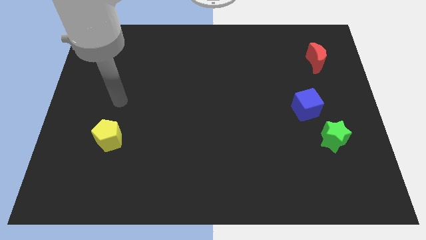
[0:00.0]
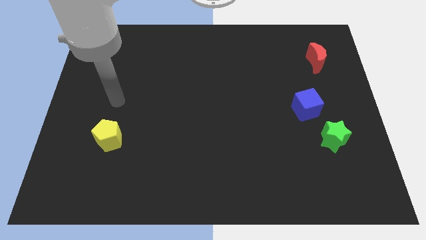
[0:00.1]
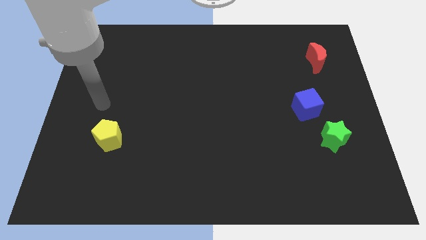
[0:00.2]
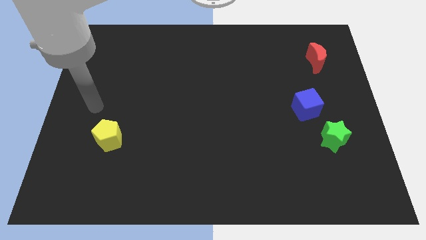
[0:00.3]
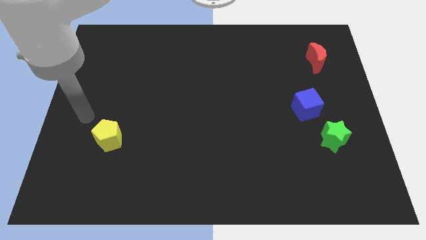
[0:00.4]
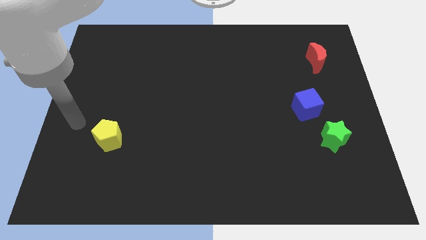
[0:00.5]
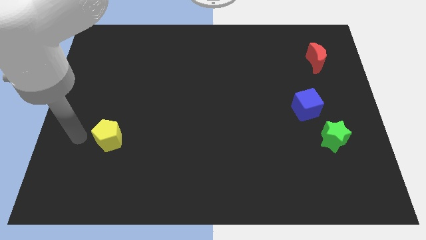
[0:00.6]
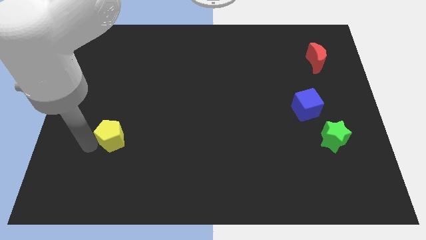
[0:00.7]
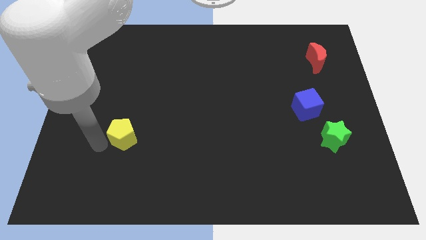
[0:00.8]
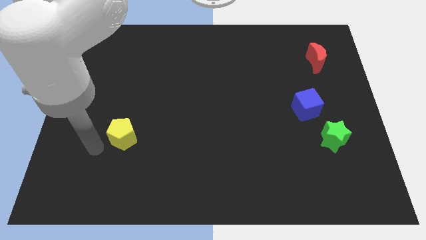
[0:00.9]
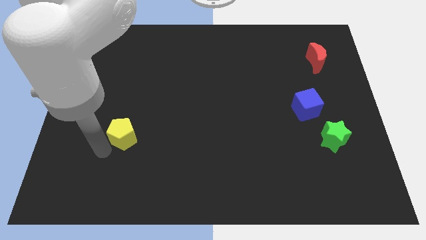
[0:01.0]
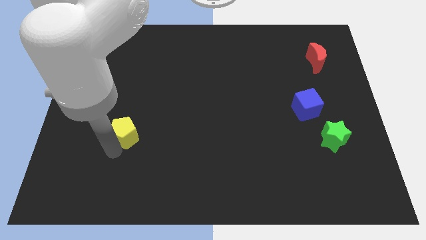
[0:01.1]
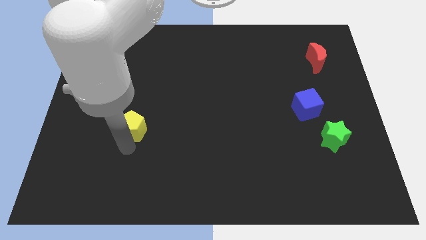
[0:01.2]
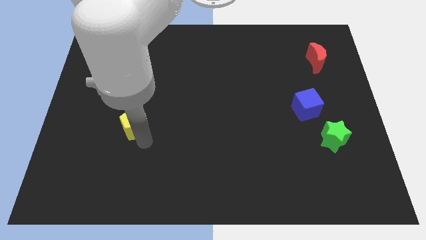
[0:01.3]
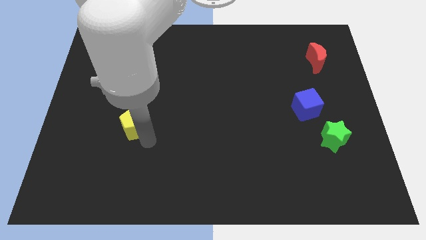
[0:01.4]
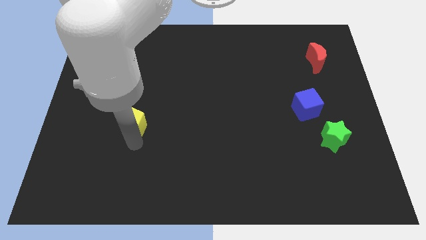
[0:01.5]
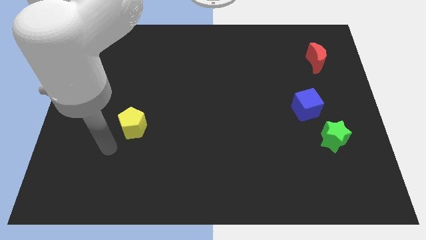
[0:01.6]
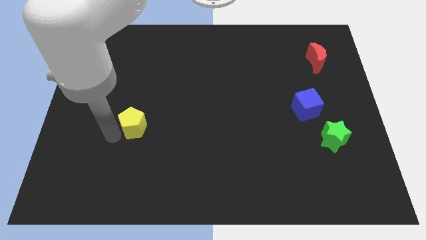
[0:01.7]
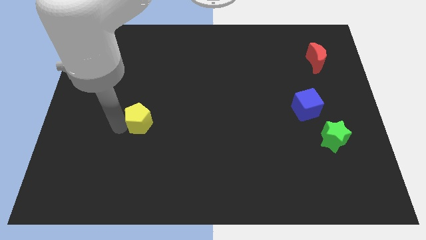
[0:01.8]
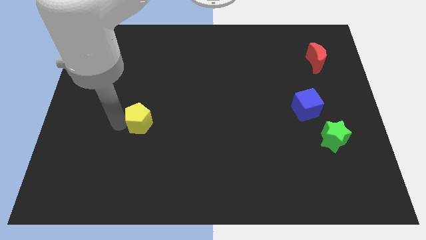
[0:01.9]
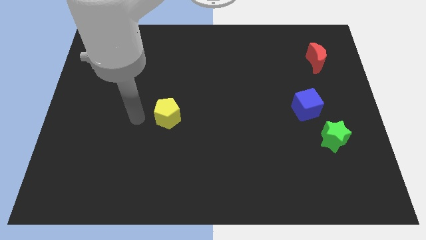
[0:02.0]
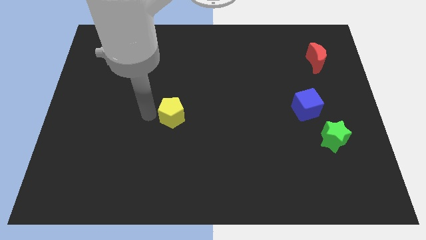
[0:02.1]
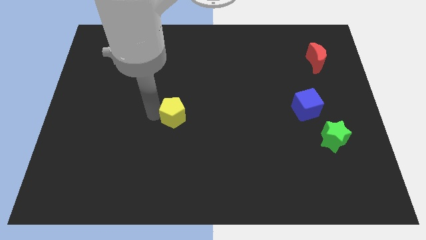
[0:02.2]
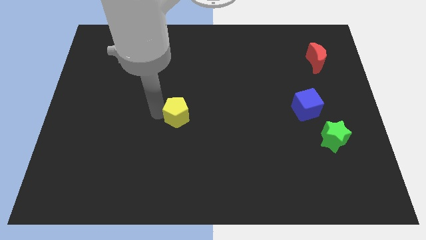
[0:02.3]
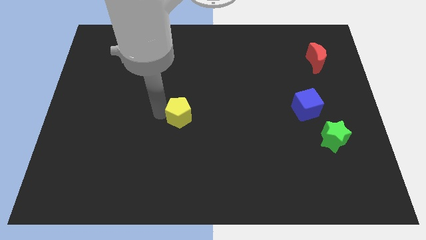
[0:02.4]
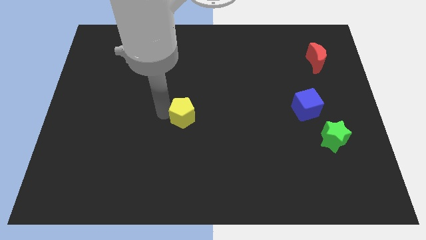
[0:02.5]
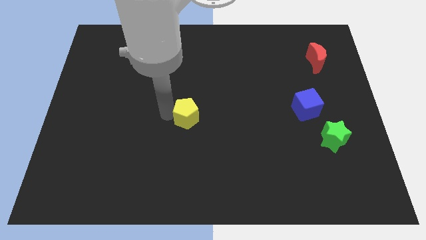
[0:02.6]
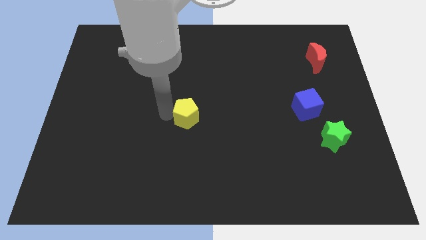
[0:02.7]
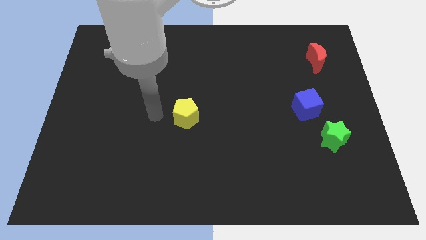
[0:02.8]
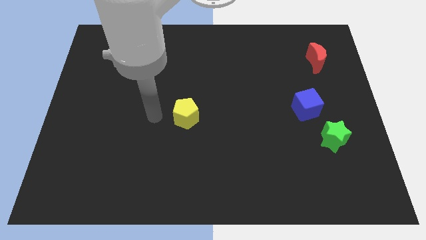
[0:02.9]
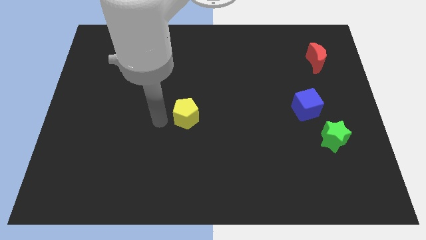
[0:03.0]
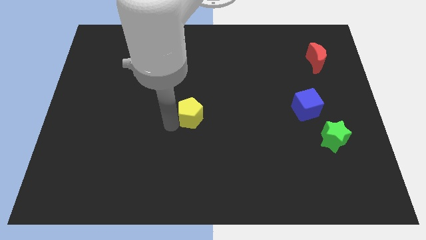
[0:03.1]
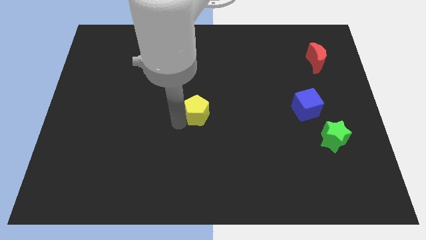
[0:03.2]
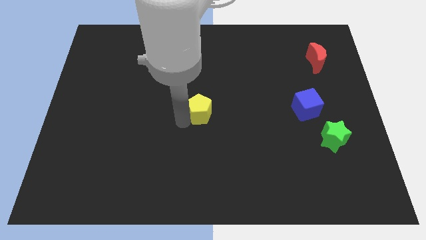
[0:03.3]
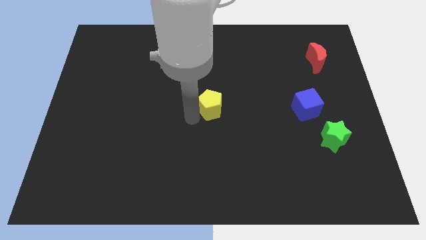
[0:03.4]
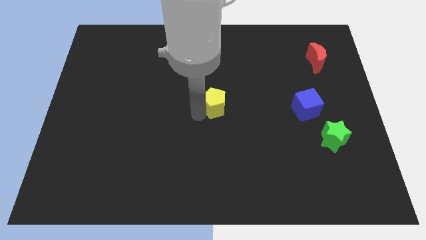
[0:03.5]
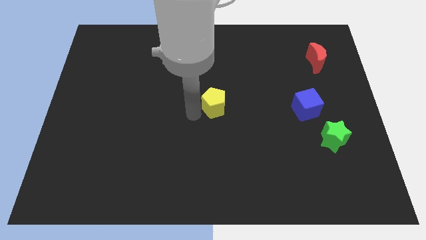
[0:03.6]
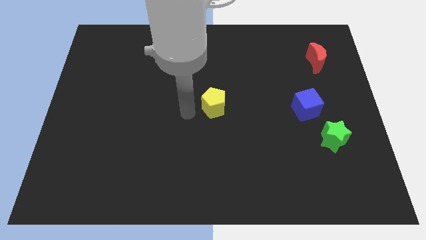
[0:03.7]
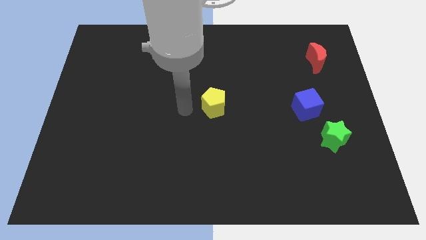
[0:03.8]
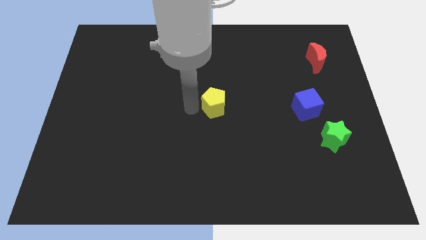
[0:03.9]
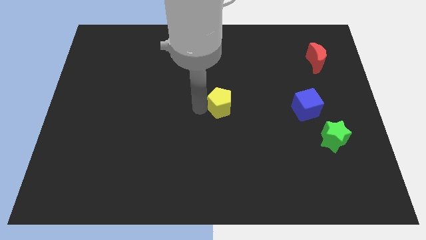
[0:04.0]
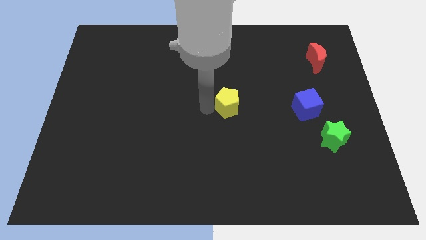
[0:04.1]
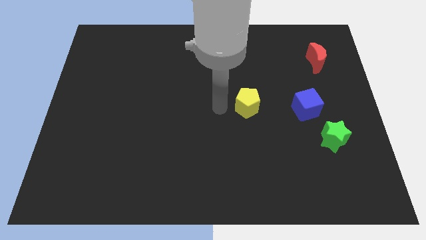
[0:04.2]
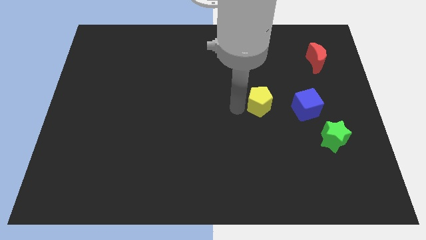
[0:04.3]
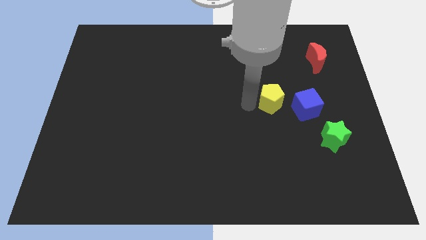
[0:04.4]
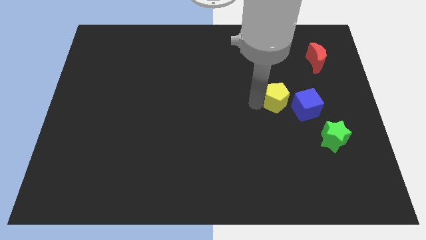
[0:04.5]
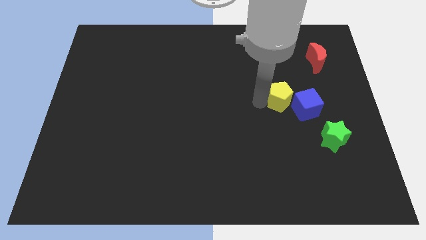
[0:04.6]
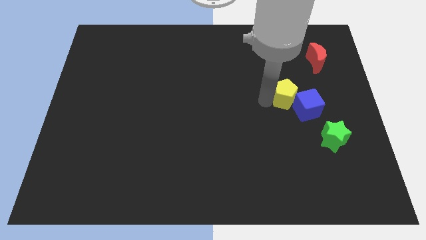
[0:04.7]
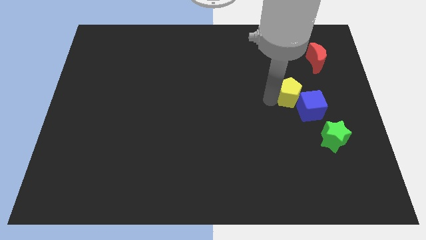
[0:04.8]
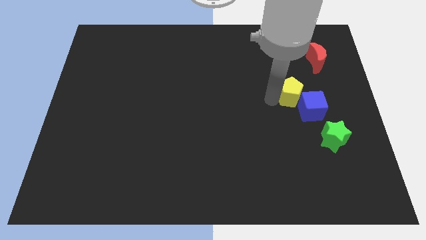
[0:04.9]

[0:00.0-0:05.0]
move the pentagon close to the blue block

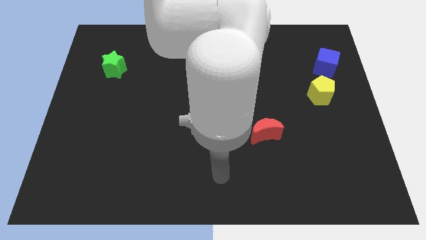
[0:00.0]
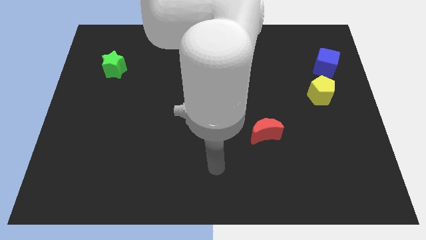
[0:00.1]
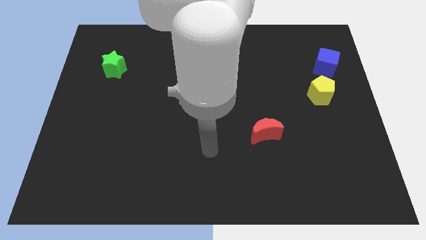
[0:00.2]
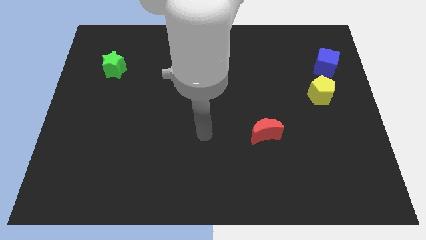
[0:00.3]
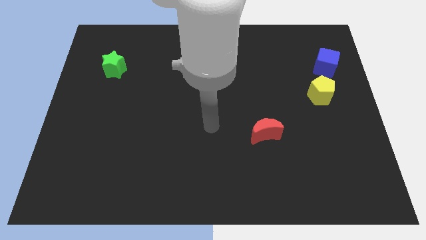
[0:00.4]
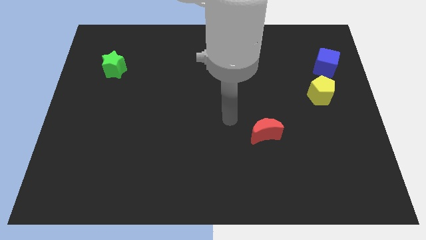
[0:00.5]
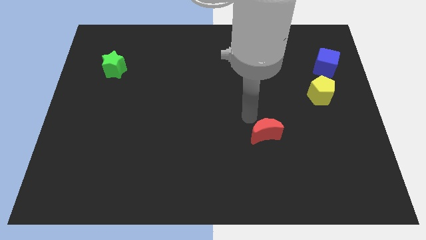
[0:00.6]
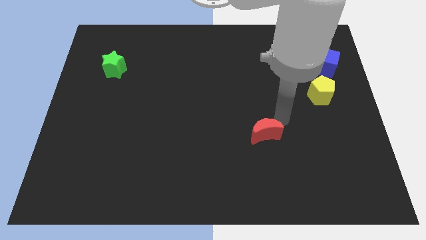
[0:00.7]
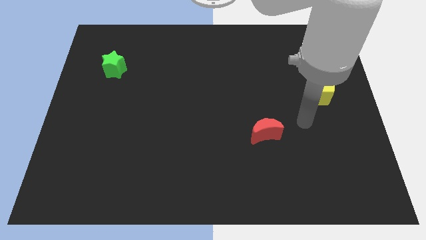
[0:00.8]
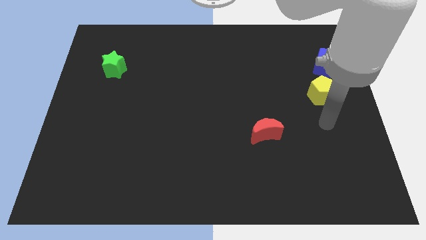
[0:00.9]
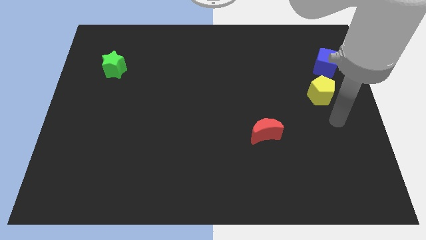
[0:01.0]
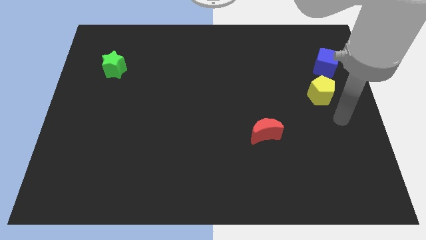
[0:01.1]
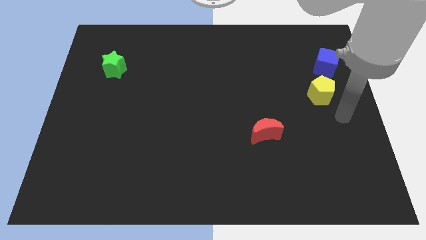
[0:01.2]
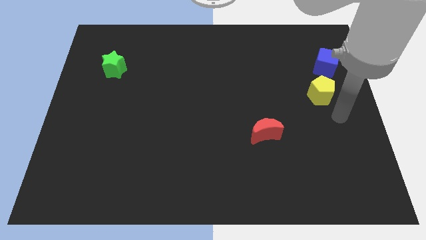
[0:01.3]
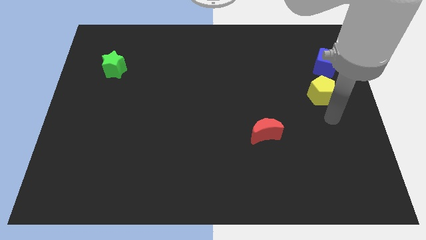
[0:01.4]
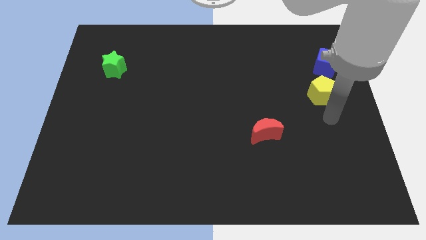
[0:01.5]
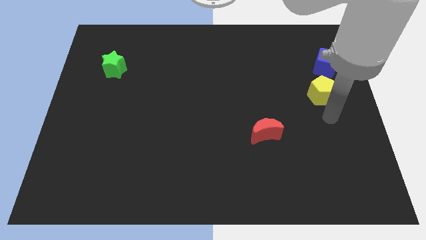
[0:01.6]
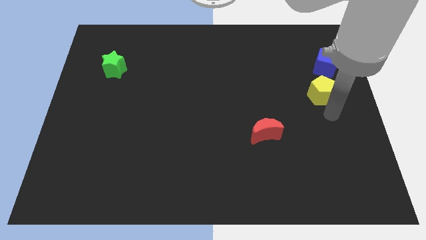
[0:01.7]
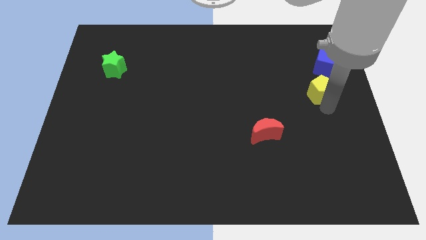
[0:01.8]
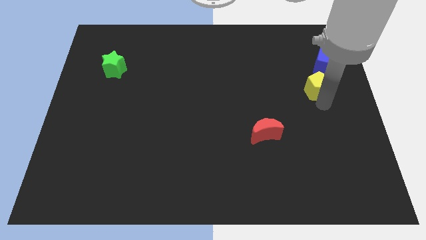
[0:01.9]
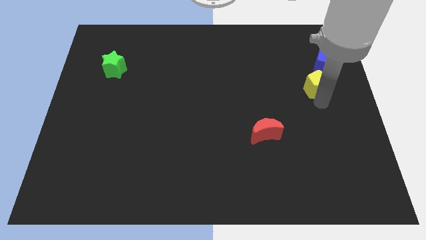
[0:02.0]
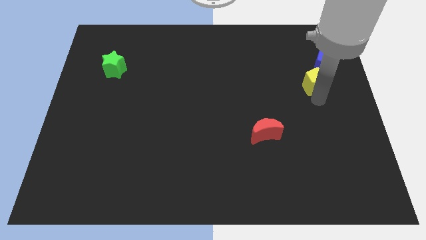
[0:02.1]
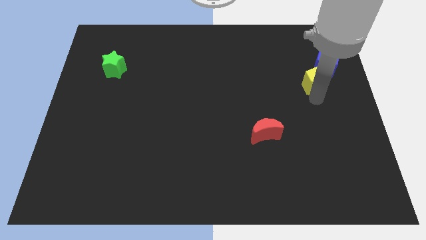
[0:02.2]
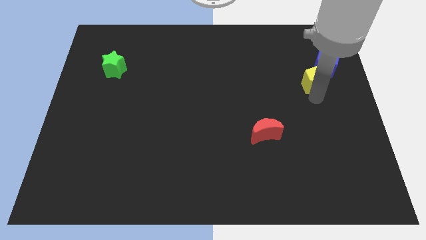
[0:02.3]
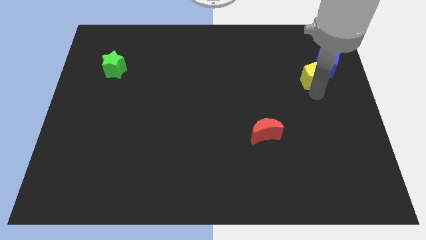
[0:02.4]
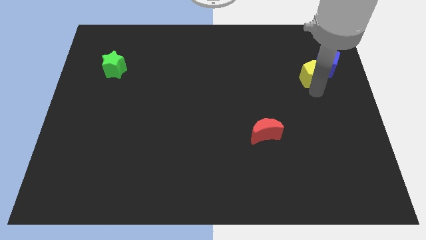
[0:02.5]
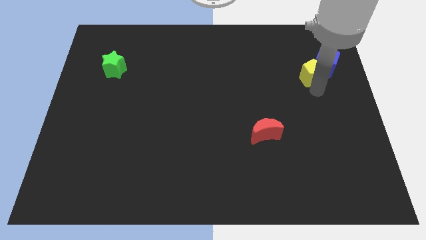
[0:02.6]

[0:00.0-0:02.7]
push the yellow block close to the cube

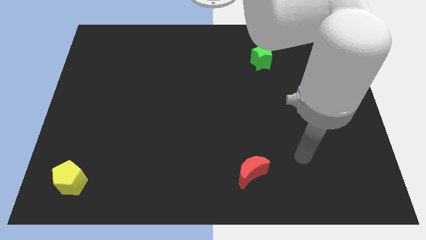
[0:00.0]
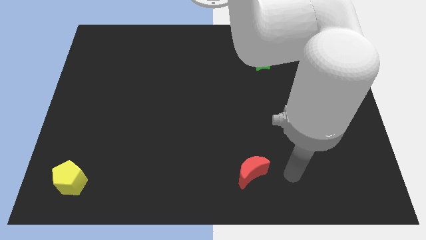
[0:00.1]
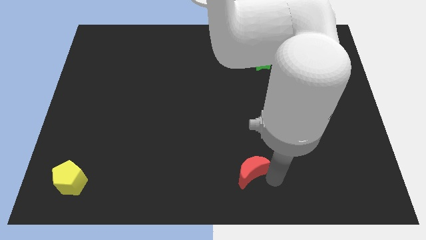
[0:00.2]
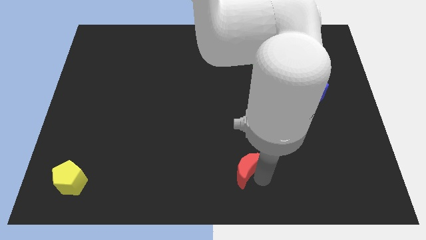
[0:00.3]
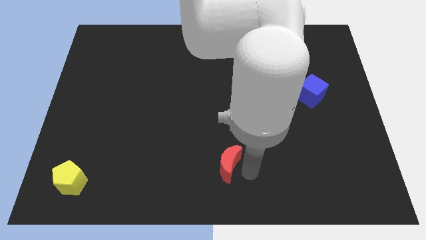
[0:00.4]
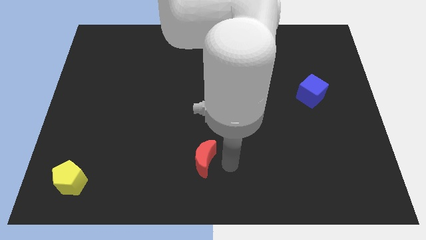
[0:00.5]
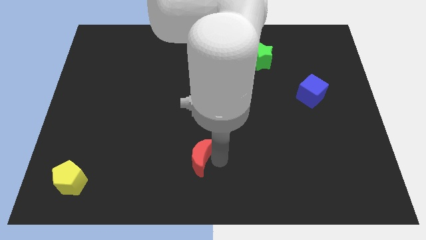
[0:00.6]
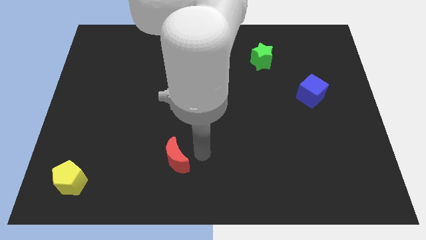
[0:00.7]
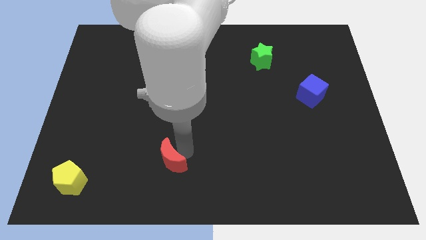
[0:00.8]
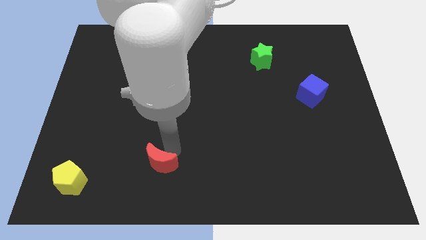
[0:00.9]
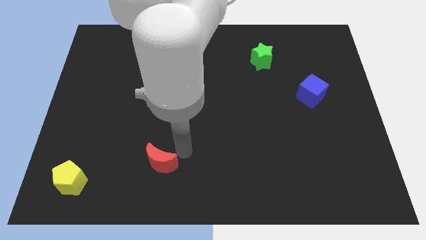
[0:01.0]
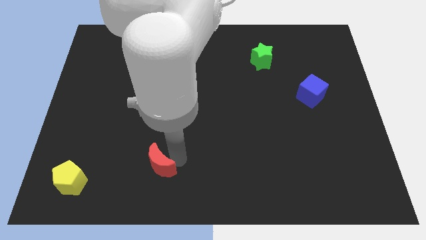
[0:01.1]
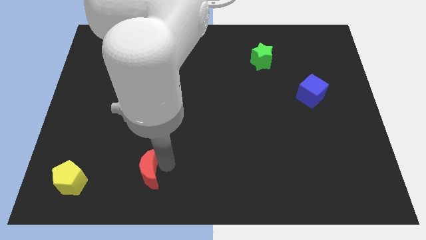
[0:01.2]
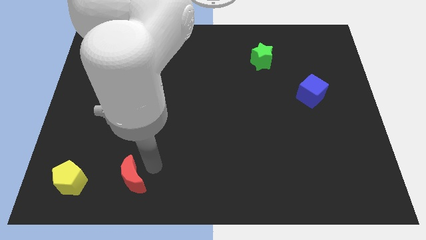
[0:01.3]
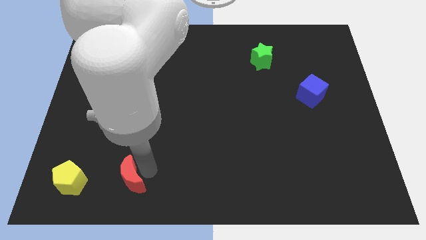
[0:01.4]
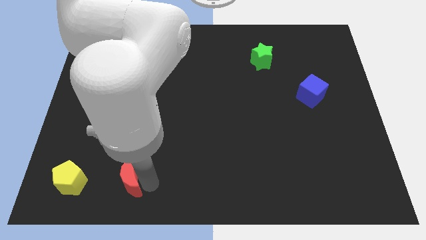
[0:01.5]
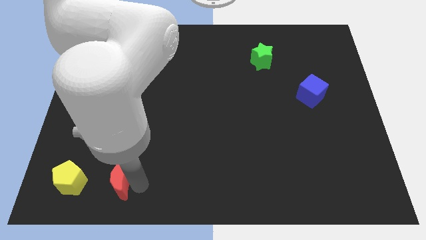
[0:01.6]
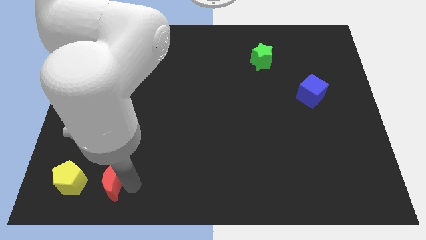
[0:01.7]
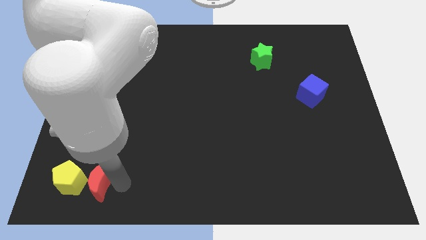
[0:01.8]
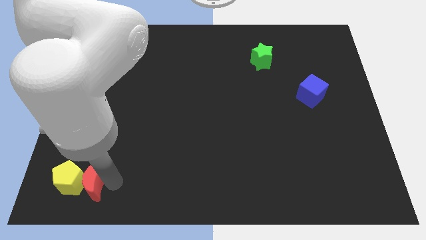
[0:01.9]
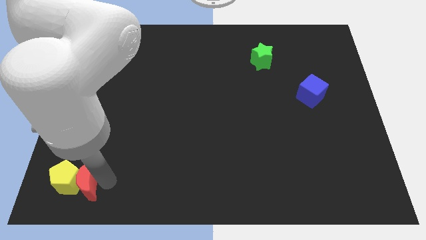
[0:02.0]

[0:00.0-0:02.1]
put the red block to the pentagon
